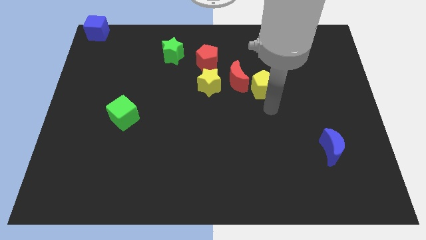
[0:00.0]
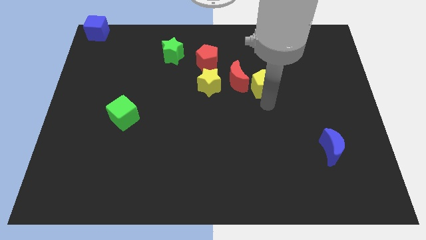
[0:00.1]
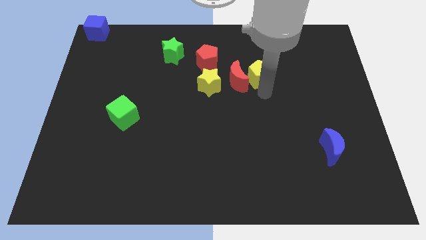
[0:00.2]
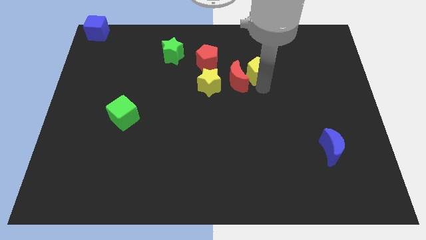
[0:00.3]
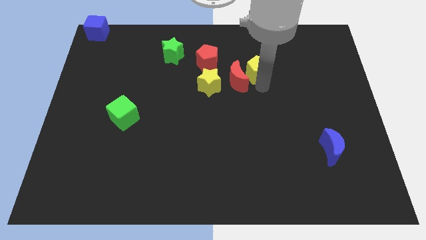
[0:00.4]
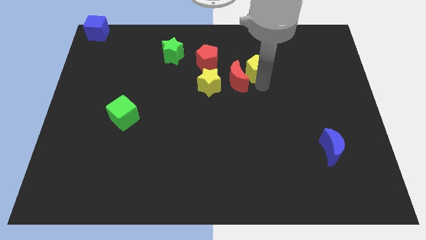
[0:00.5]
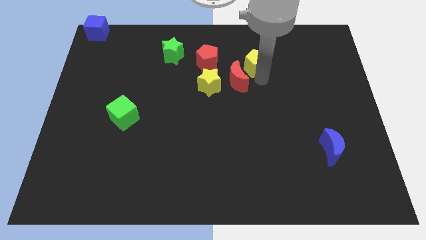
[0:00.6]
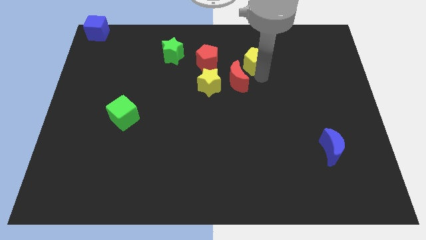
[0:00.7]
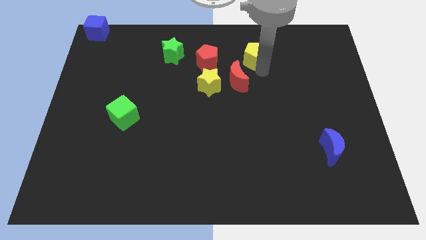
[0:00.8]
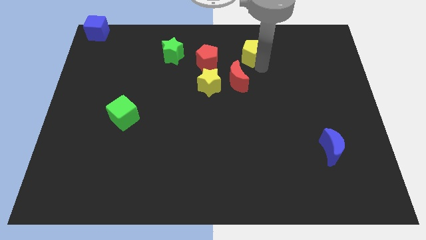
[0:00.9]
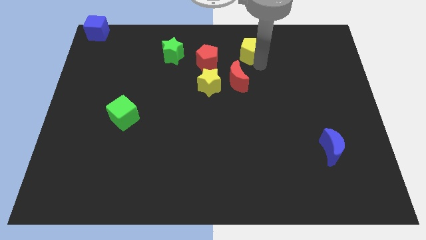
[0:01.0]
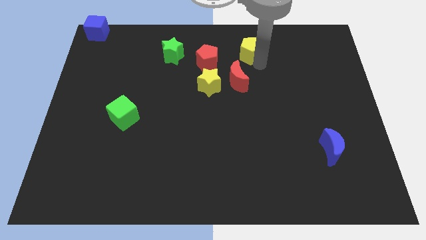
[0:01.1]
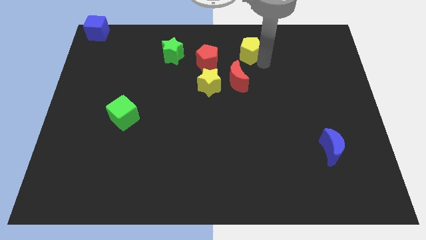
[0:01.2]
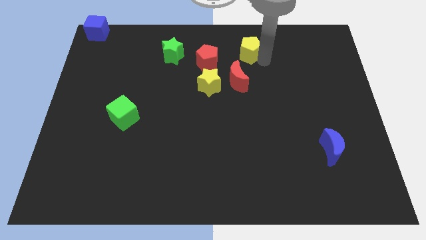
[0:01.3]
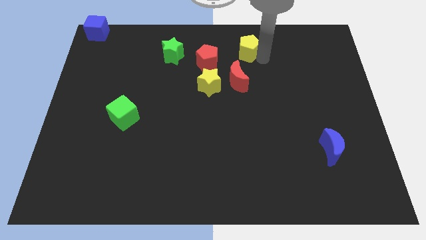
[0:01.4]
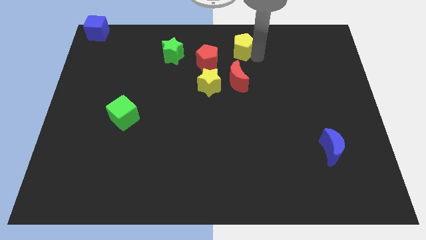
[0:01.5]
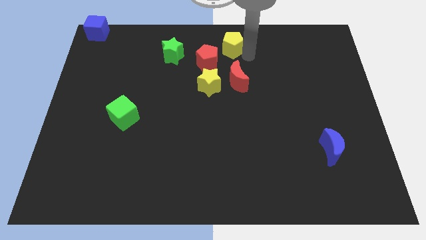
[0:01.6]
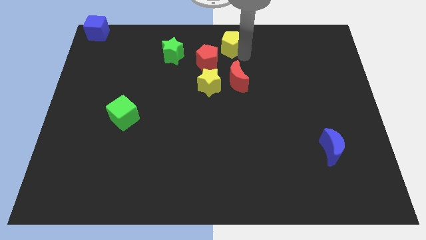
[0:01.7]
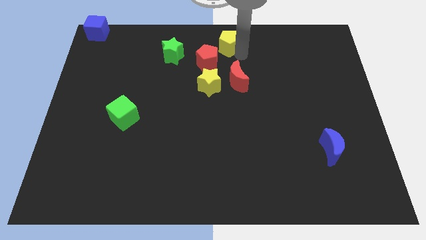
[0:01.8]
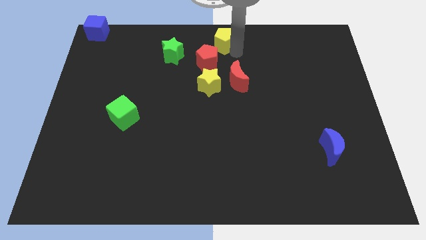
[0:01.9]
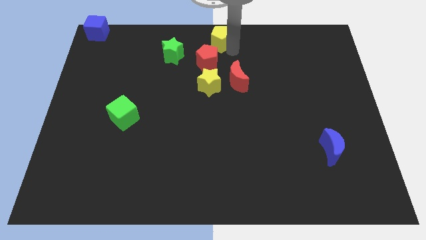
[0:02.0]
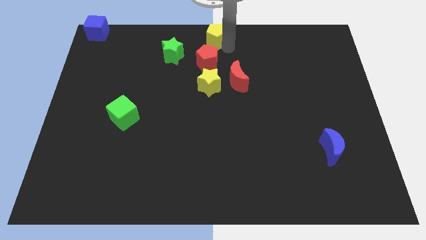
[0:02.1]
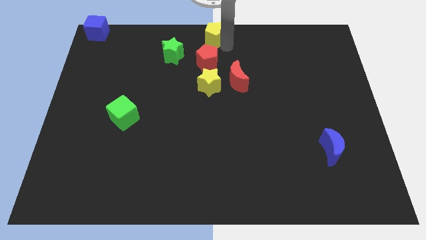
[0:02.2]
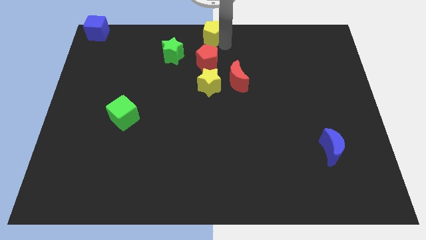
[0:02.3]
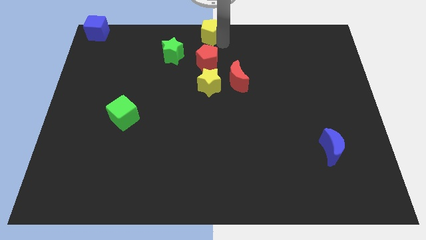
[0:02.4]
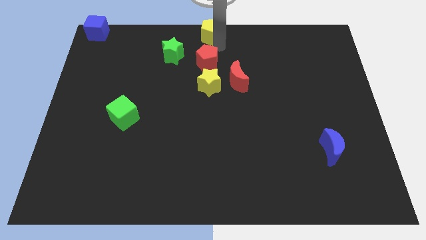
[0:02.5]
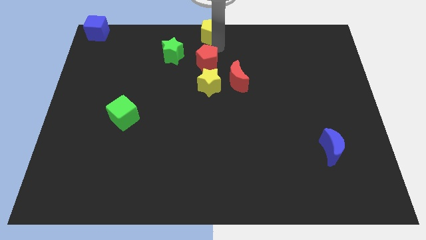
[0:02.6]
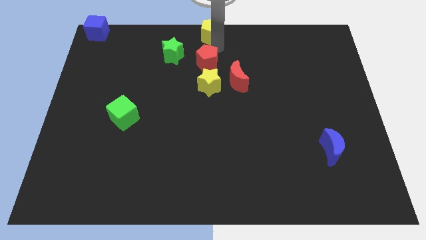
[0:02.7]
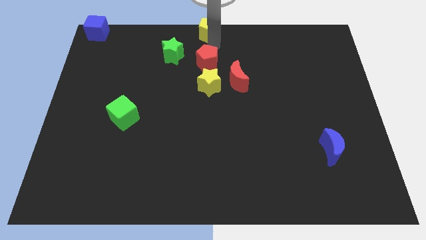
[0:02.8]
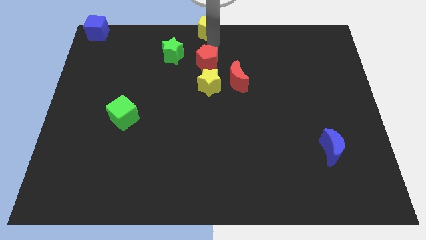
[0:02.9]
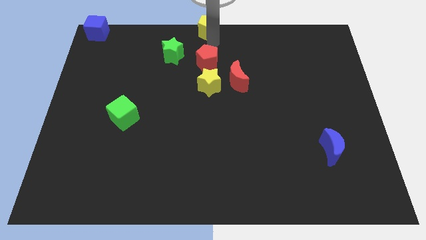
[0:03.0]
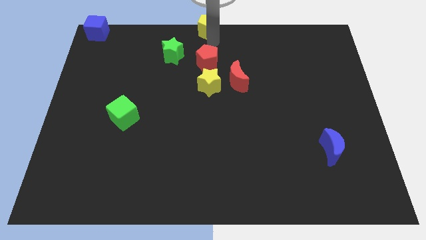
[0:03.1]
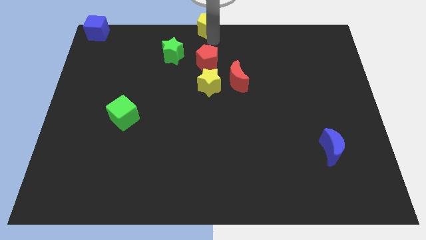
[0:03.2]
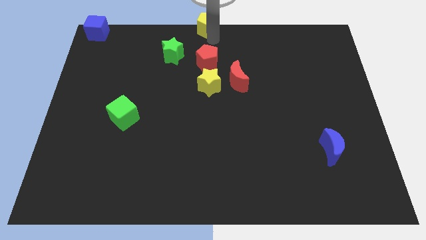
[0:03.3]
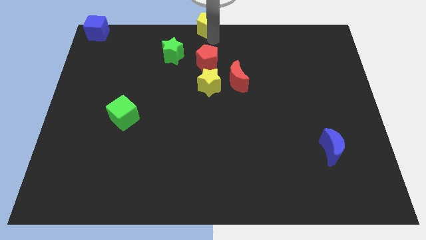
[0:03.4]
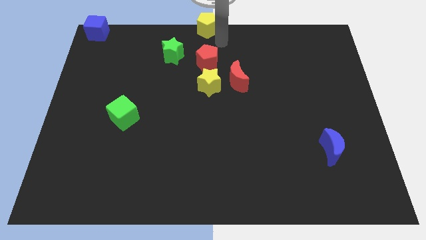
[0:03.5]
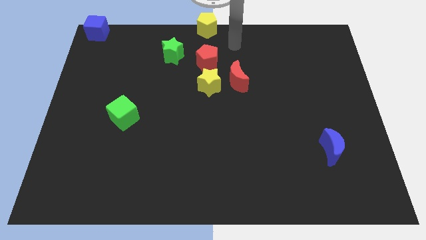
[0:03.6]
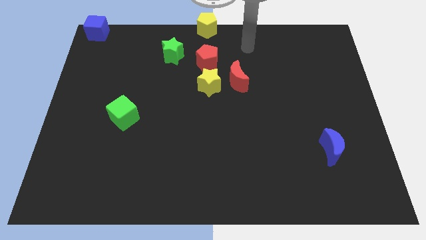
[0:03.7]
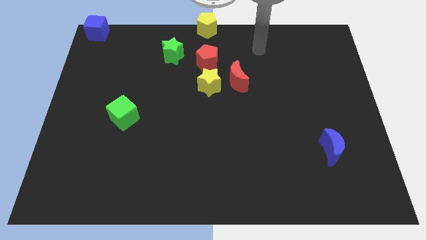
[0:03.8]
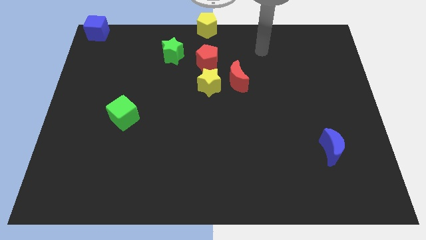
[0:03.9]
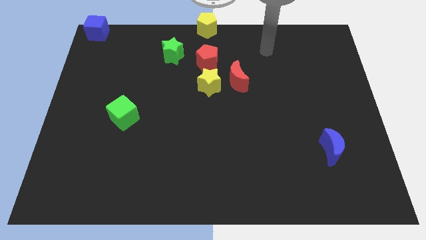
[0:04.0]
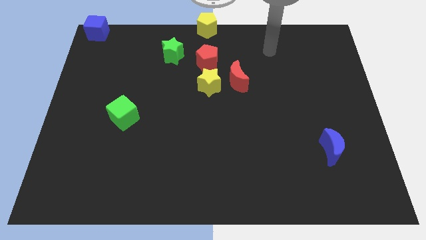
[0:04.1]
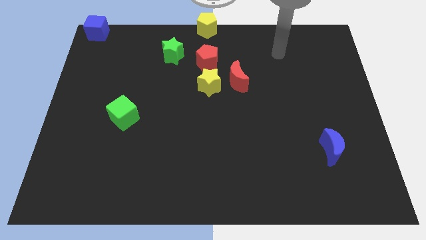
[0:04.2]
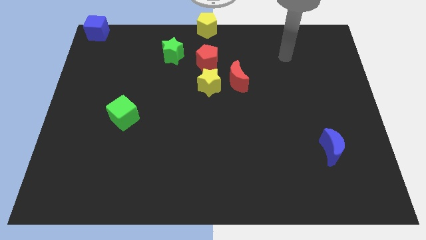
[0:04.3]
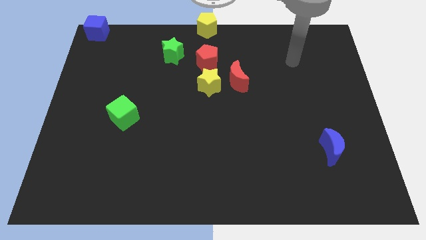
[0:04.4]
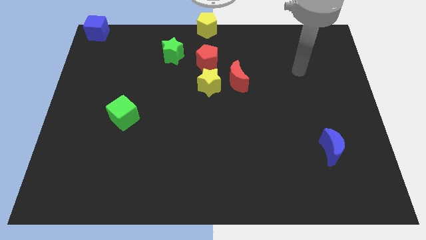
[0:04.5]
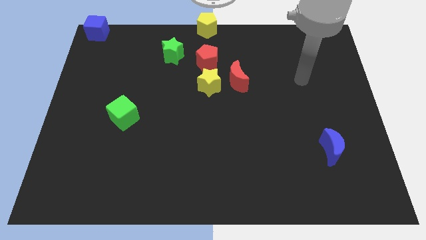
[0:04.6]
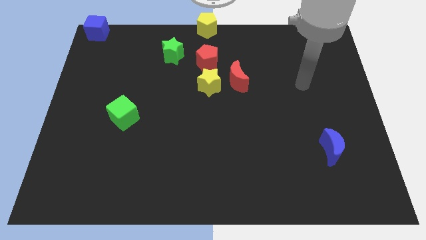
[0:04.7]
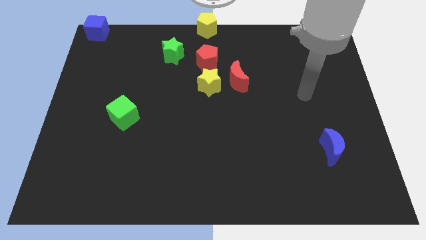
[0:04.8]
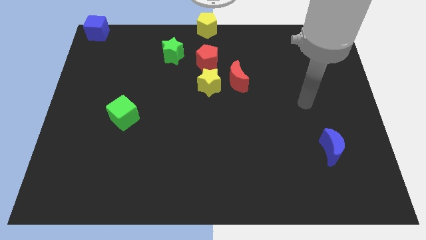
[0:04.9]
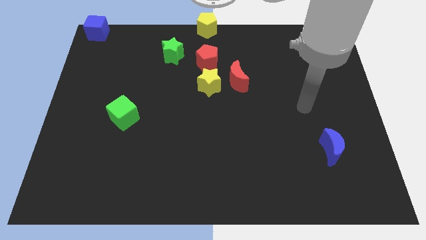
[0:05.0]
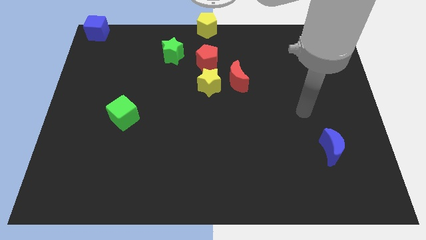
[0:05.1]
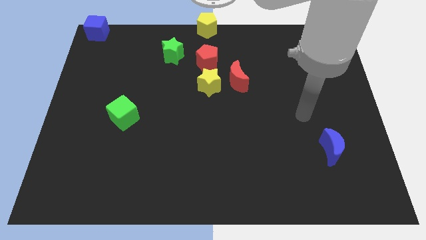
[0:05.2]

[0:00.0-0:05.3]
move the yellow pentagon to the top centre of the board

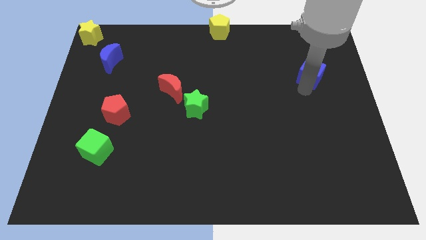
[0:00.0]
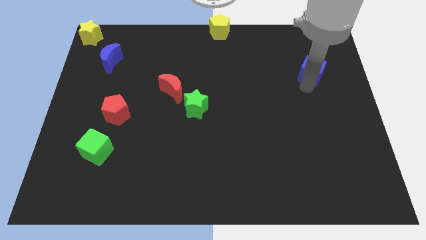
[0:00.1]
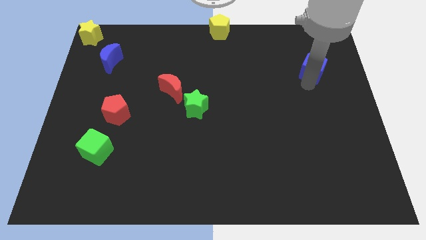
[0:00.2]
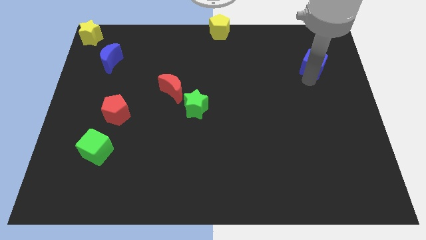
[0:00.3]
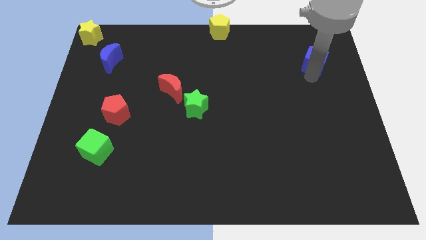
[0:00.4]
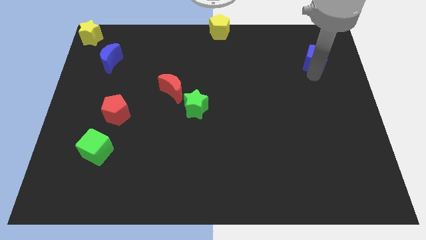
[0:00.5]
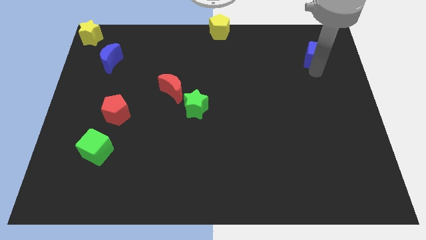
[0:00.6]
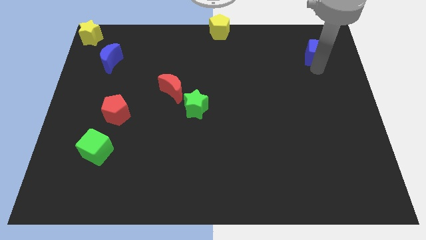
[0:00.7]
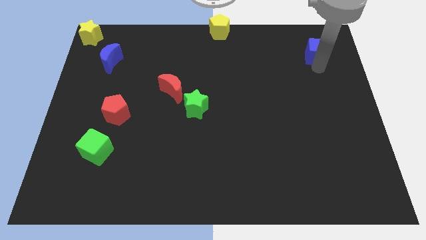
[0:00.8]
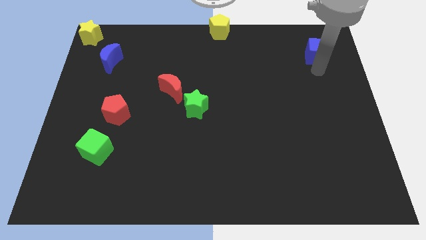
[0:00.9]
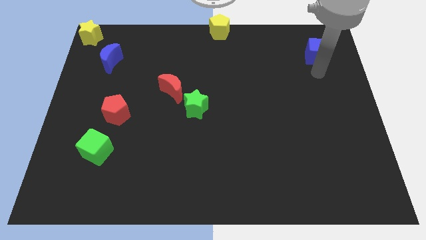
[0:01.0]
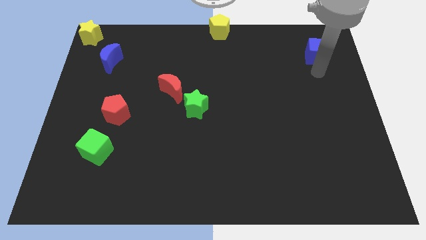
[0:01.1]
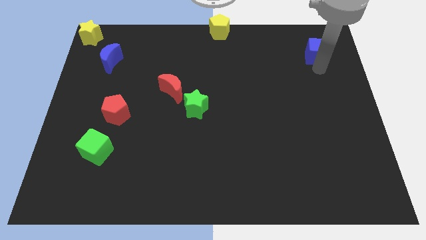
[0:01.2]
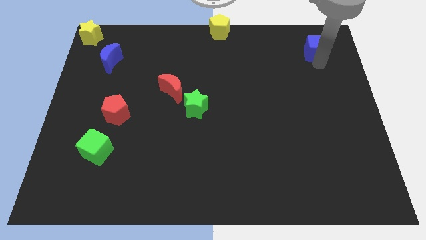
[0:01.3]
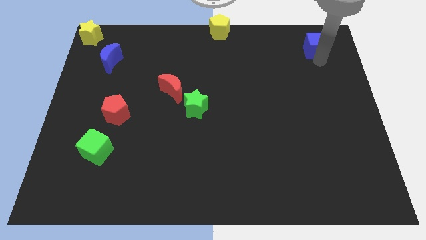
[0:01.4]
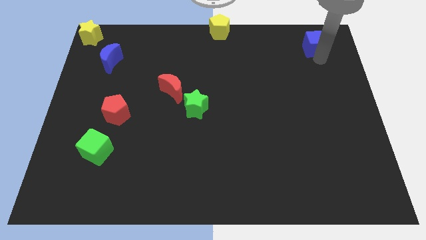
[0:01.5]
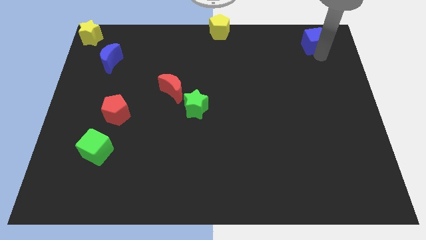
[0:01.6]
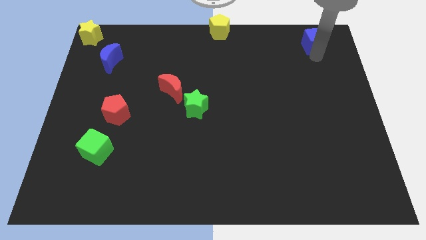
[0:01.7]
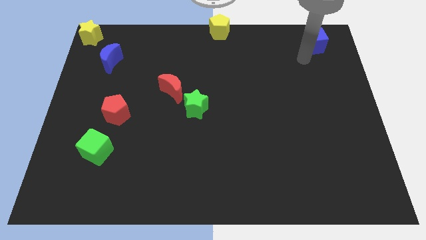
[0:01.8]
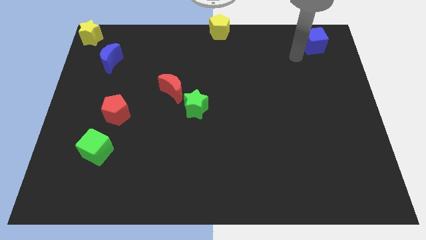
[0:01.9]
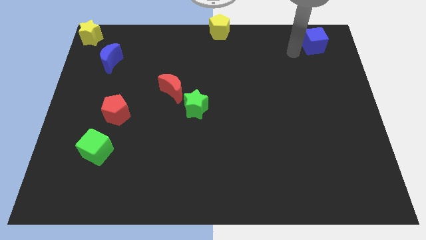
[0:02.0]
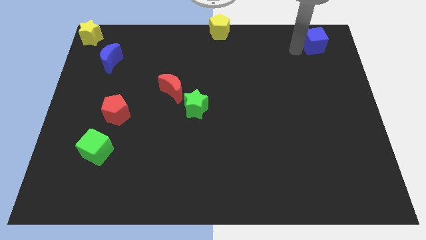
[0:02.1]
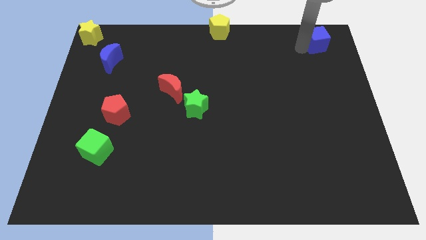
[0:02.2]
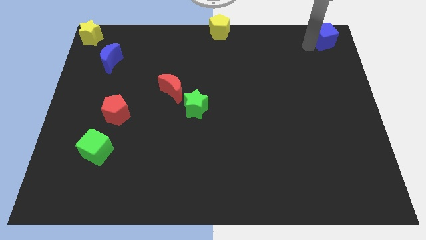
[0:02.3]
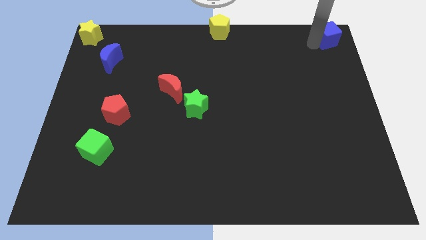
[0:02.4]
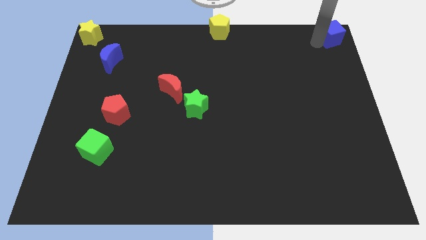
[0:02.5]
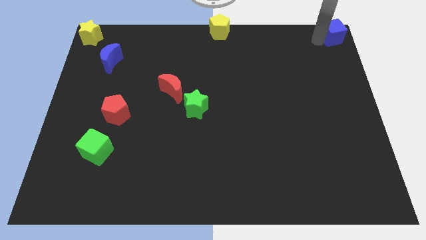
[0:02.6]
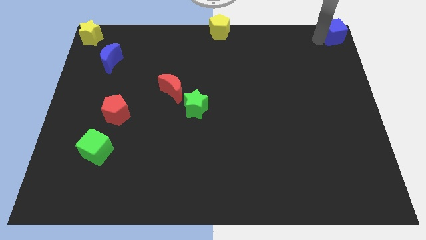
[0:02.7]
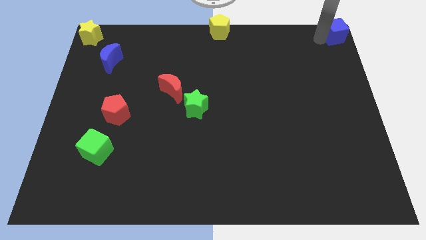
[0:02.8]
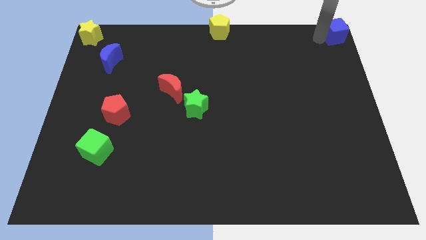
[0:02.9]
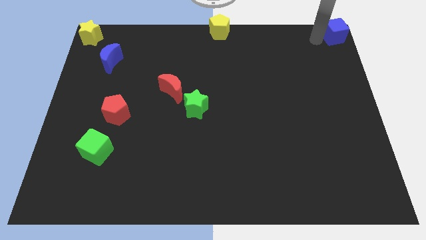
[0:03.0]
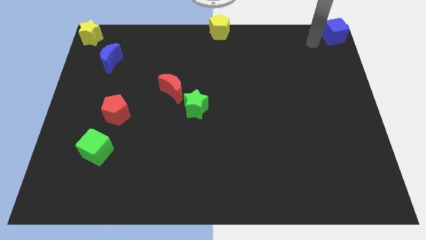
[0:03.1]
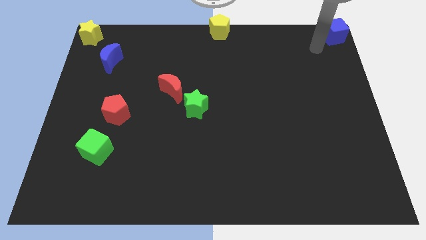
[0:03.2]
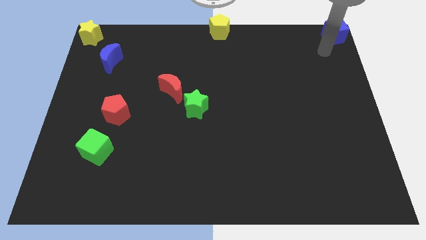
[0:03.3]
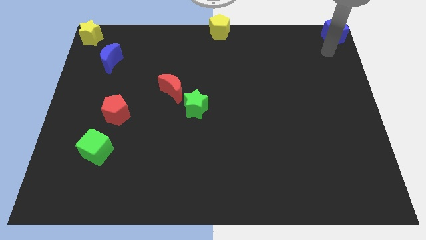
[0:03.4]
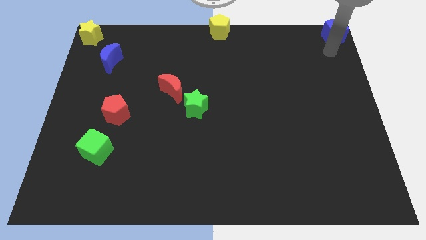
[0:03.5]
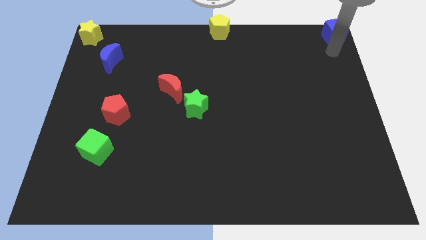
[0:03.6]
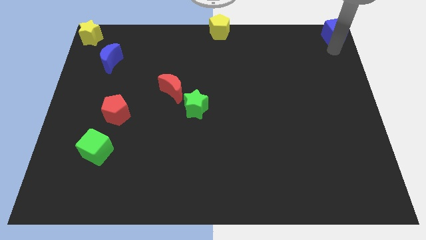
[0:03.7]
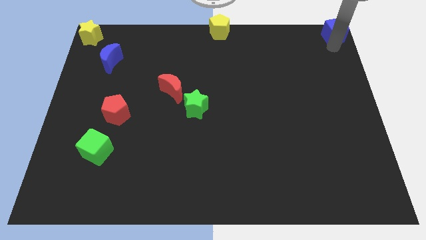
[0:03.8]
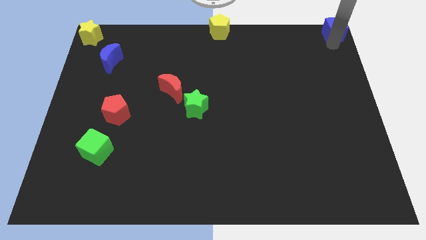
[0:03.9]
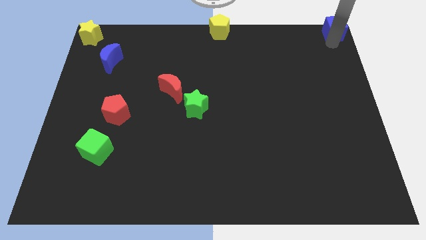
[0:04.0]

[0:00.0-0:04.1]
form a horizontal line with yellow blocks and the blue cube
